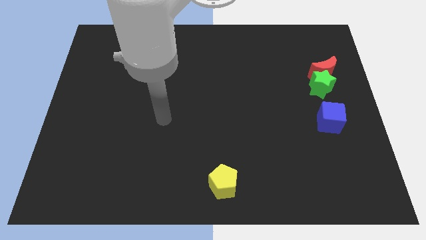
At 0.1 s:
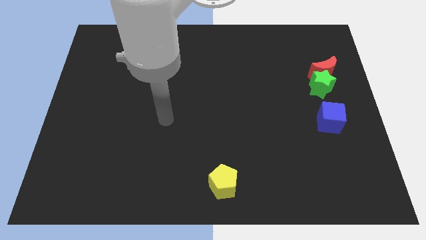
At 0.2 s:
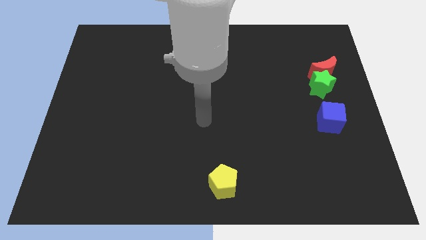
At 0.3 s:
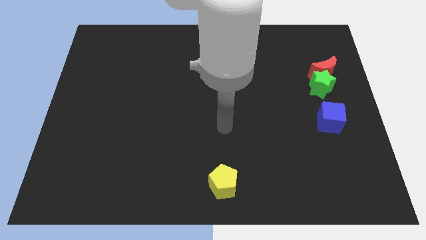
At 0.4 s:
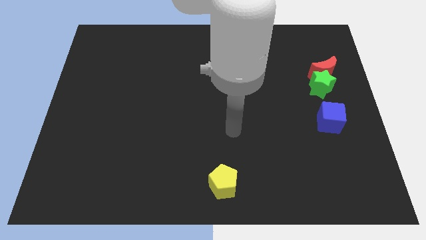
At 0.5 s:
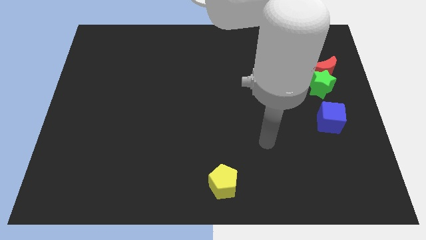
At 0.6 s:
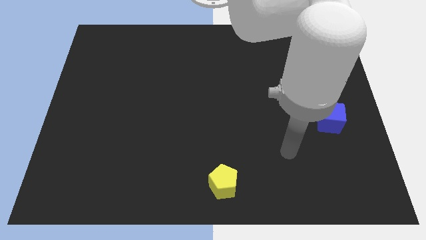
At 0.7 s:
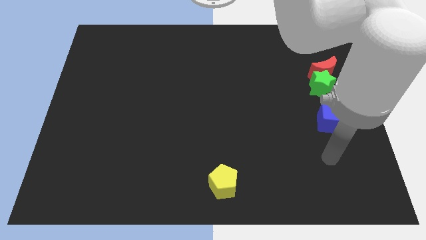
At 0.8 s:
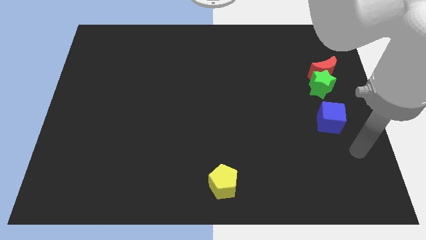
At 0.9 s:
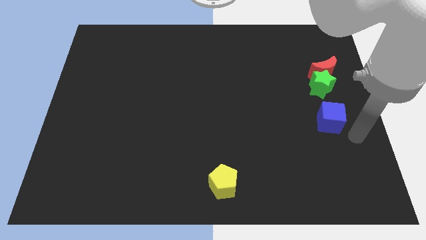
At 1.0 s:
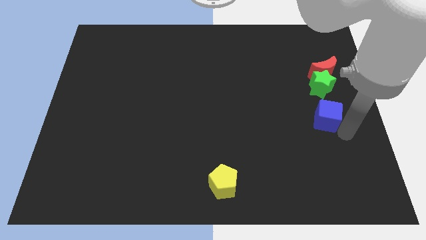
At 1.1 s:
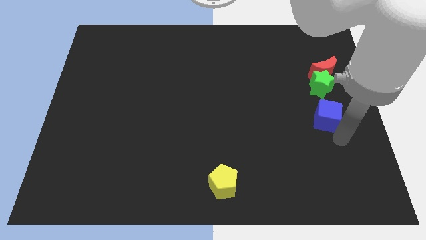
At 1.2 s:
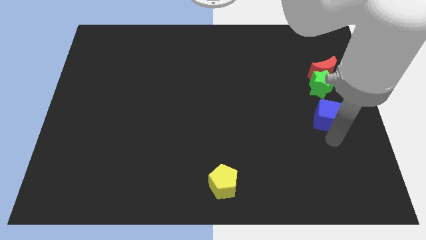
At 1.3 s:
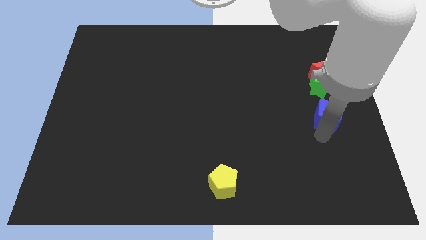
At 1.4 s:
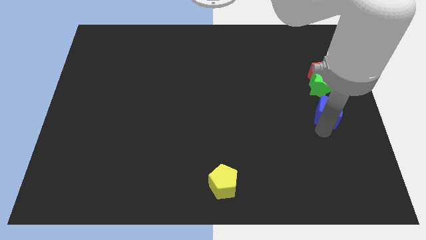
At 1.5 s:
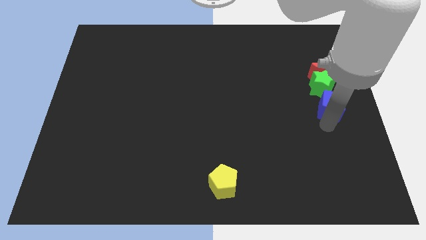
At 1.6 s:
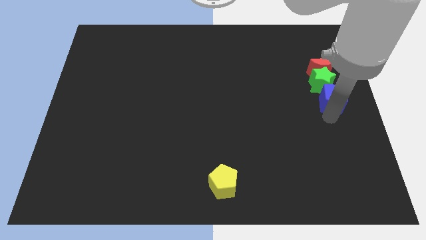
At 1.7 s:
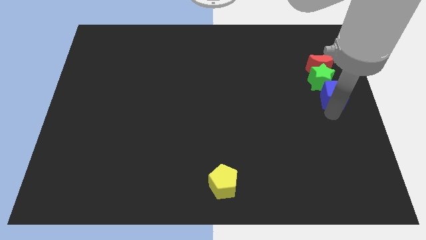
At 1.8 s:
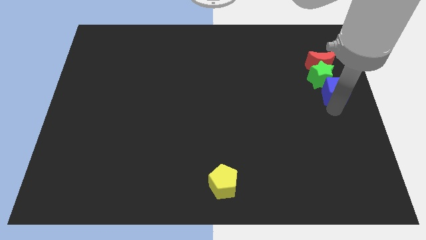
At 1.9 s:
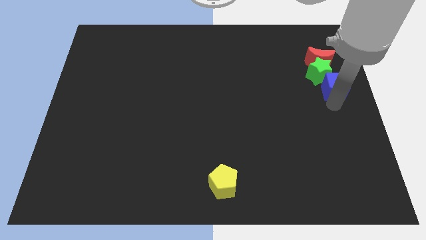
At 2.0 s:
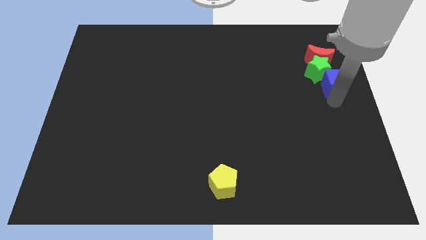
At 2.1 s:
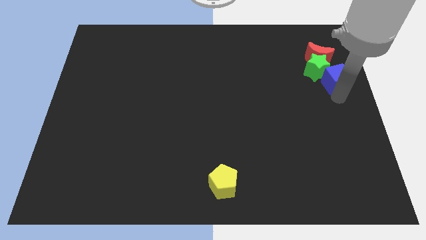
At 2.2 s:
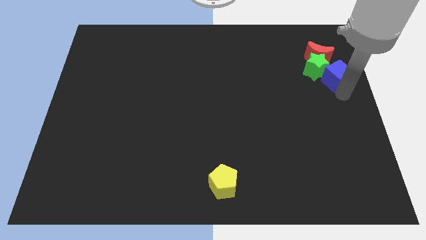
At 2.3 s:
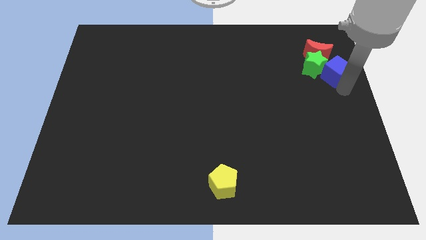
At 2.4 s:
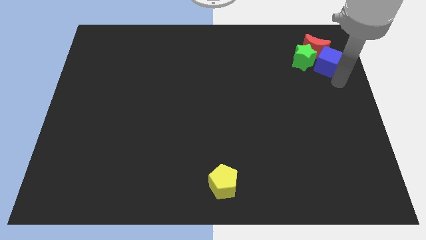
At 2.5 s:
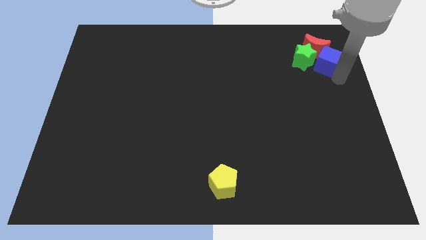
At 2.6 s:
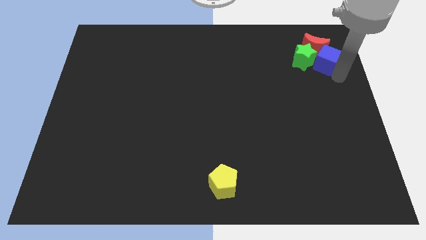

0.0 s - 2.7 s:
move the cube close to the red block

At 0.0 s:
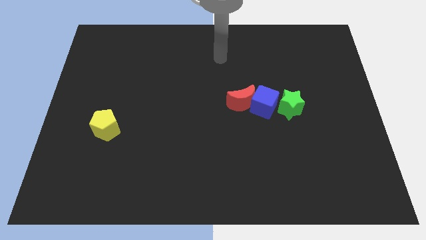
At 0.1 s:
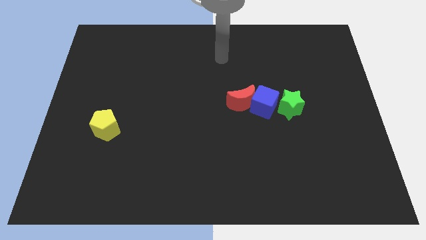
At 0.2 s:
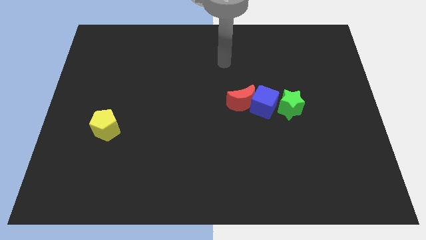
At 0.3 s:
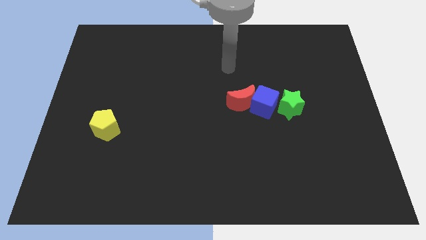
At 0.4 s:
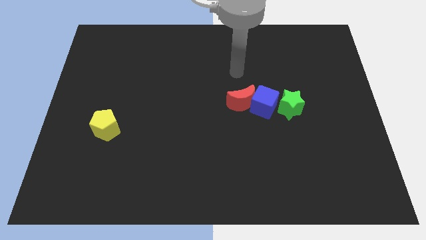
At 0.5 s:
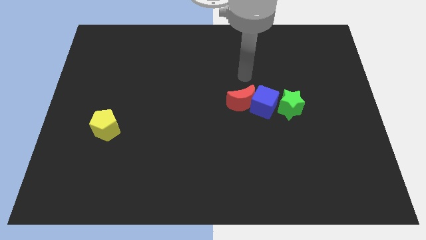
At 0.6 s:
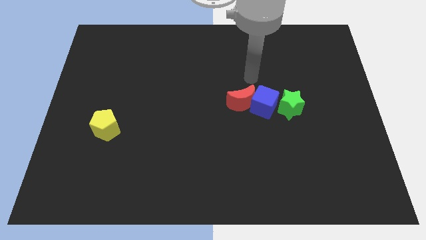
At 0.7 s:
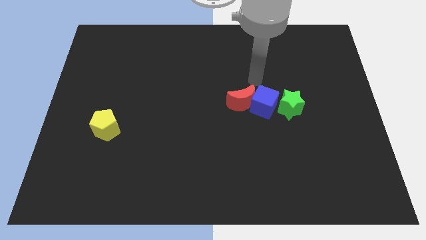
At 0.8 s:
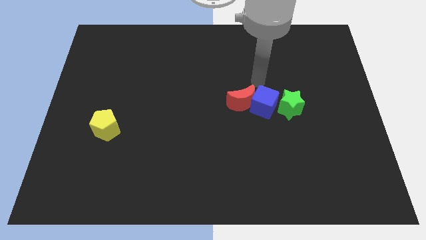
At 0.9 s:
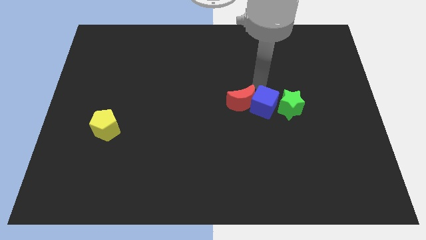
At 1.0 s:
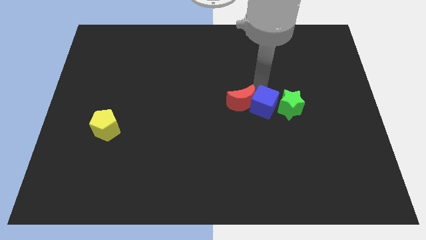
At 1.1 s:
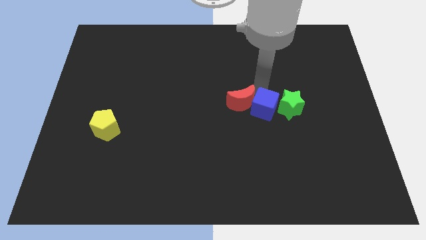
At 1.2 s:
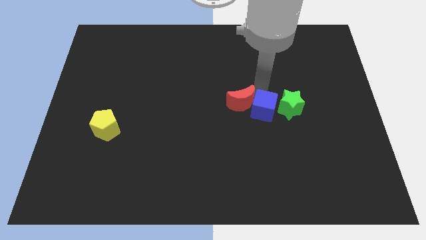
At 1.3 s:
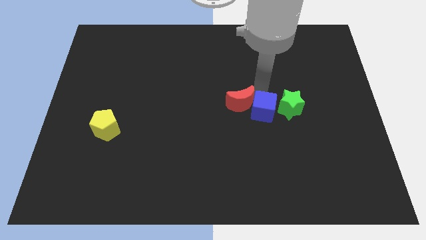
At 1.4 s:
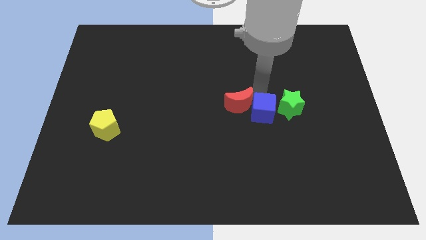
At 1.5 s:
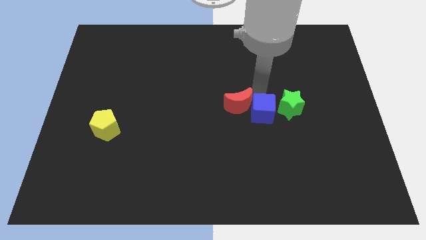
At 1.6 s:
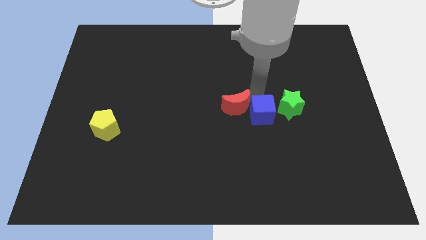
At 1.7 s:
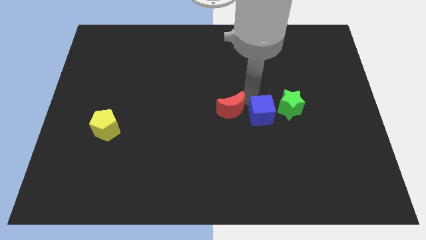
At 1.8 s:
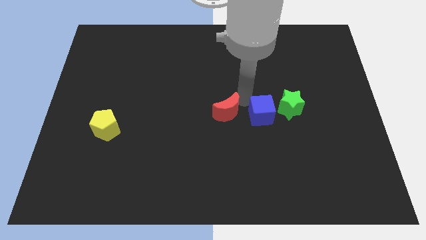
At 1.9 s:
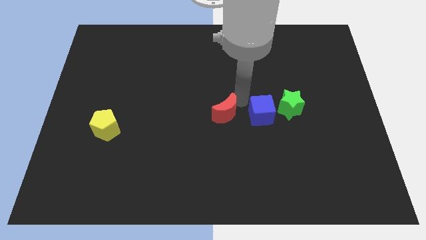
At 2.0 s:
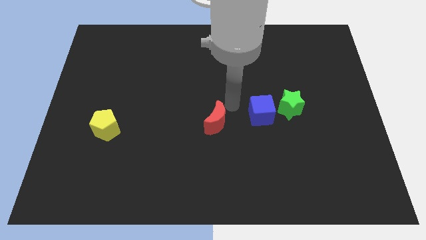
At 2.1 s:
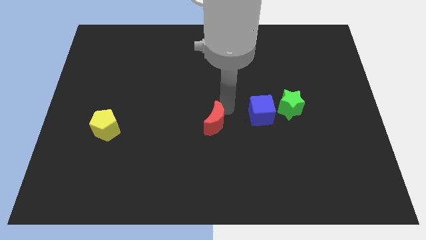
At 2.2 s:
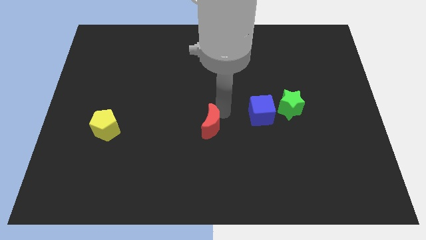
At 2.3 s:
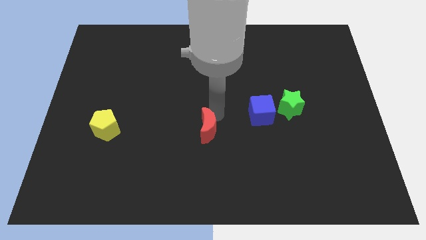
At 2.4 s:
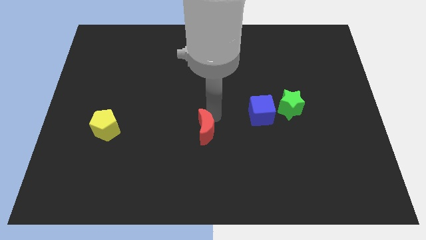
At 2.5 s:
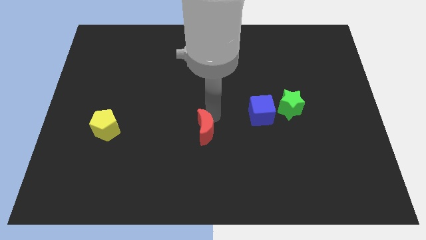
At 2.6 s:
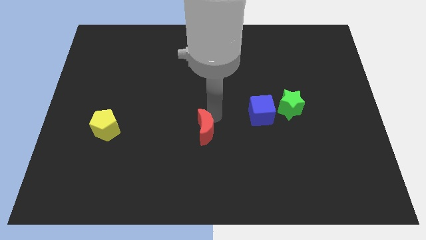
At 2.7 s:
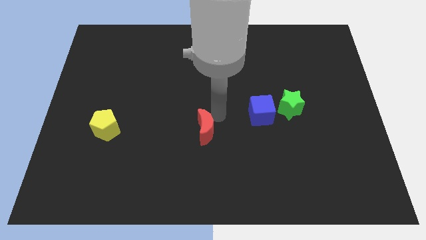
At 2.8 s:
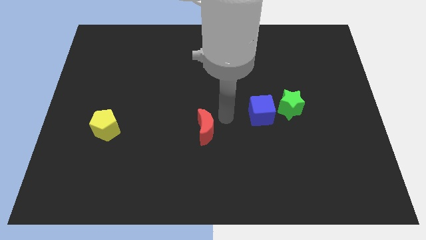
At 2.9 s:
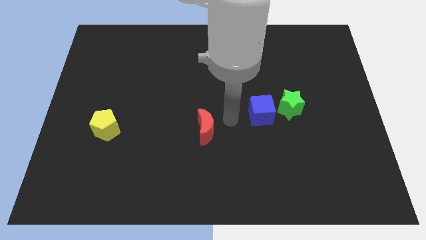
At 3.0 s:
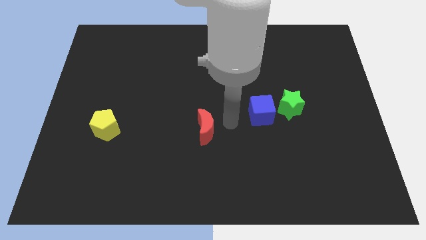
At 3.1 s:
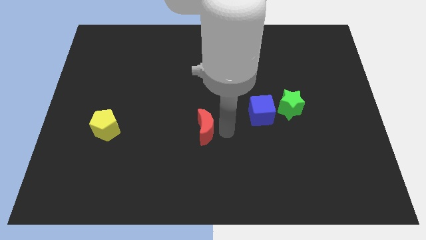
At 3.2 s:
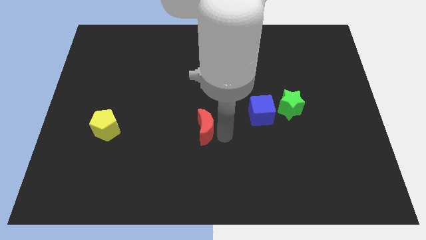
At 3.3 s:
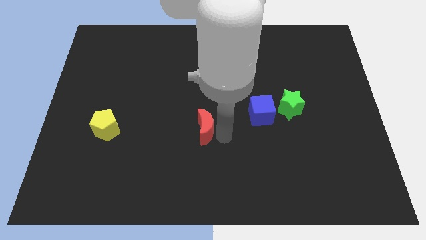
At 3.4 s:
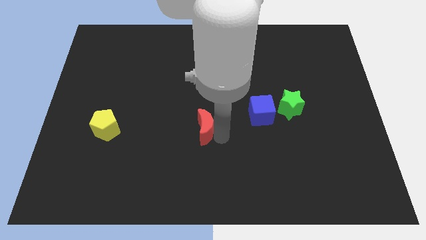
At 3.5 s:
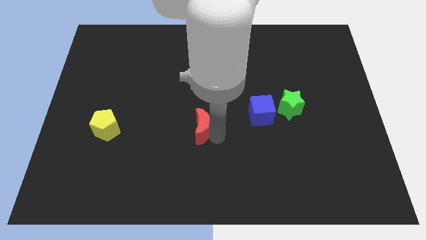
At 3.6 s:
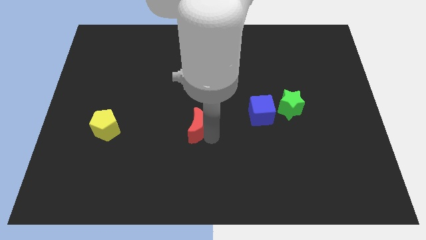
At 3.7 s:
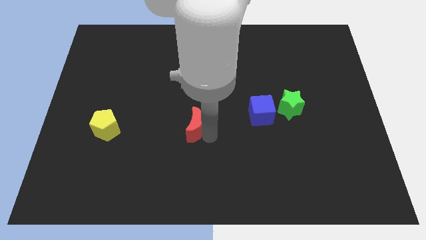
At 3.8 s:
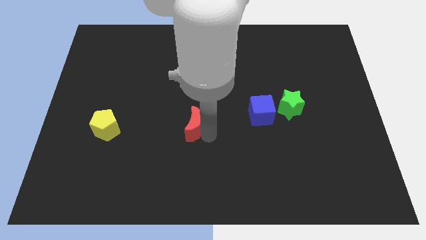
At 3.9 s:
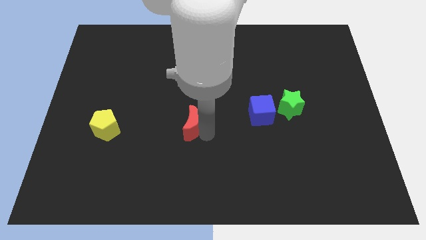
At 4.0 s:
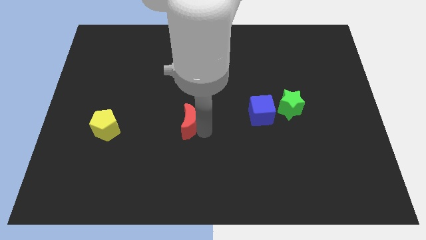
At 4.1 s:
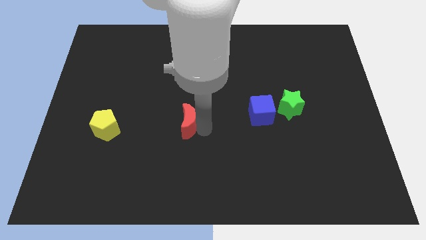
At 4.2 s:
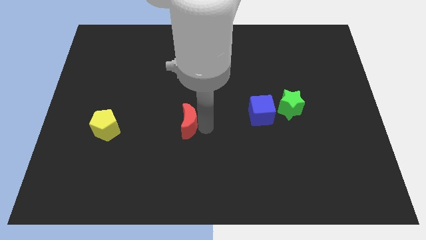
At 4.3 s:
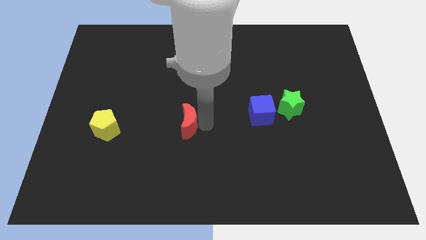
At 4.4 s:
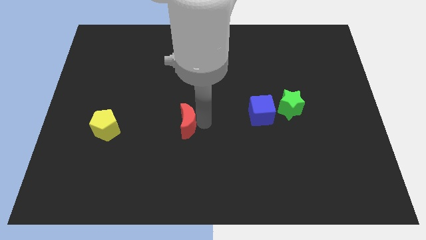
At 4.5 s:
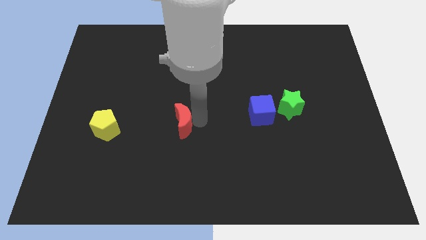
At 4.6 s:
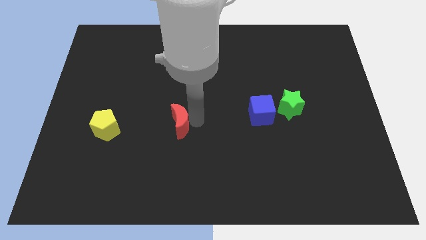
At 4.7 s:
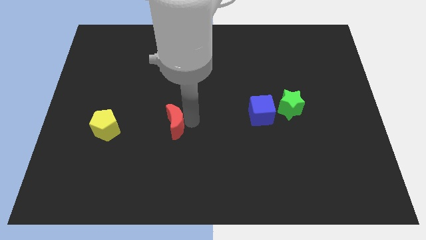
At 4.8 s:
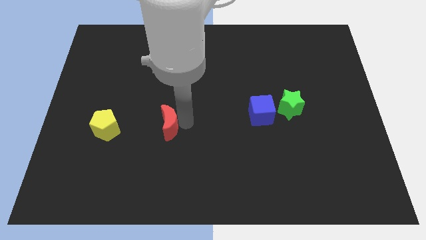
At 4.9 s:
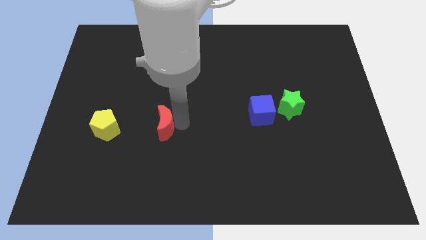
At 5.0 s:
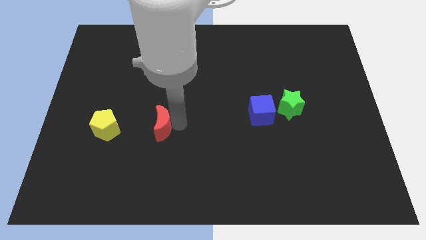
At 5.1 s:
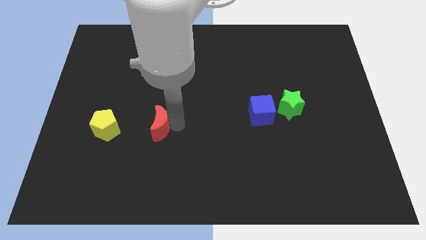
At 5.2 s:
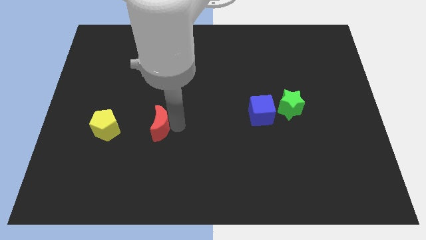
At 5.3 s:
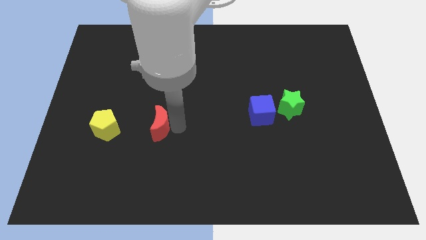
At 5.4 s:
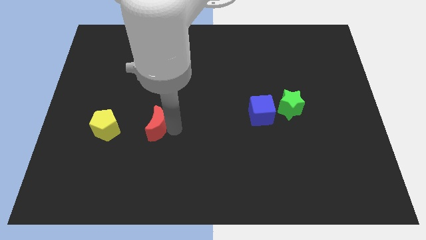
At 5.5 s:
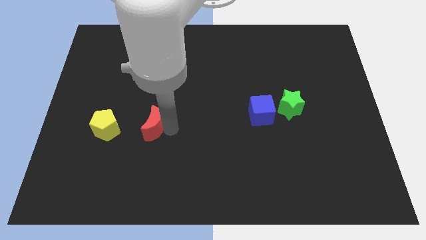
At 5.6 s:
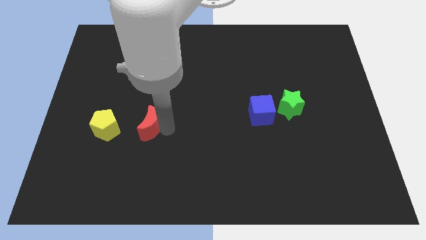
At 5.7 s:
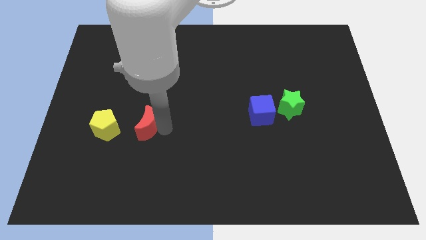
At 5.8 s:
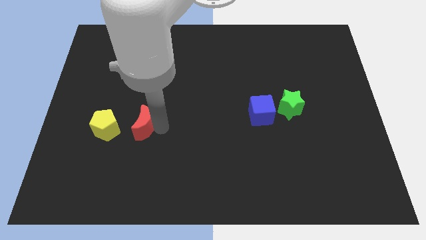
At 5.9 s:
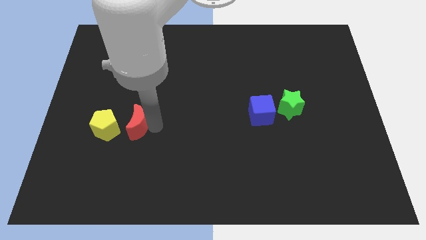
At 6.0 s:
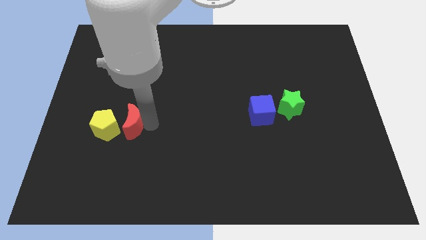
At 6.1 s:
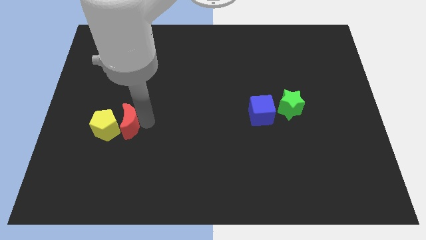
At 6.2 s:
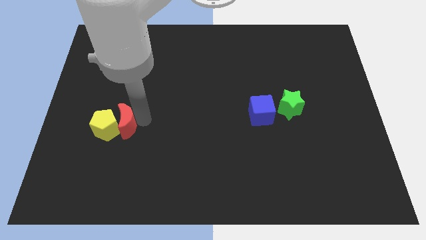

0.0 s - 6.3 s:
slide the moon to the yellow pentagon
